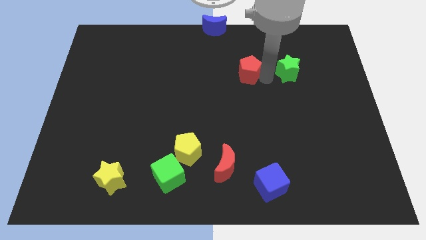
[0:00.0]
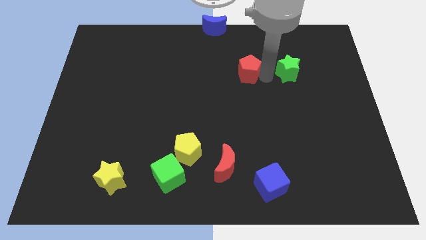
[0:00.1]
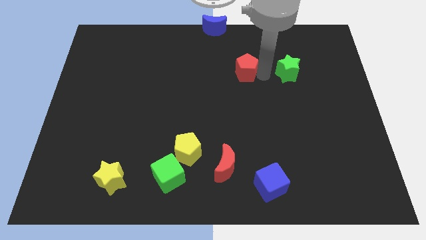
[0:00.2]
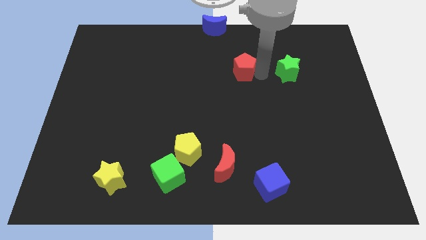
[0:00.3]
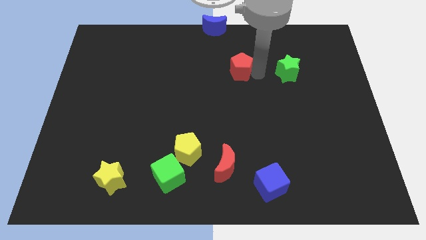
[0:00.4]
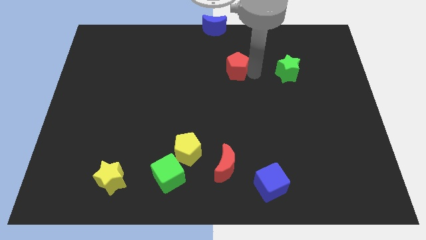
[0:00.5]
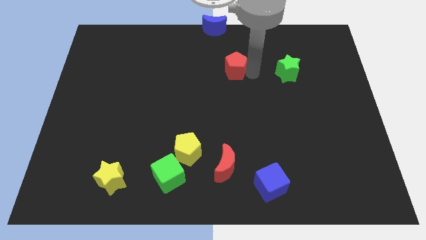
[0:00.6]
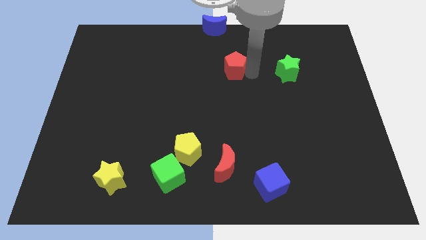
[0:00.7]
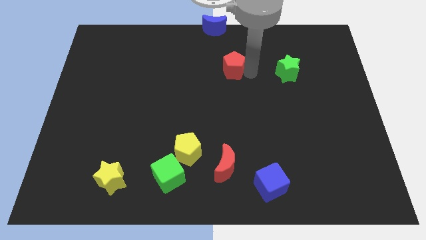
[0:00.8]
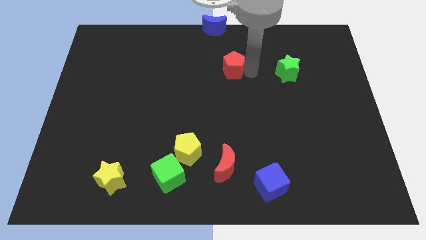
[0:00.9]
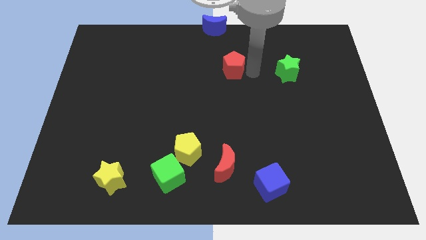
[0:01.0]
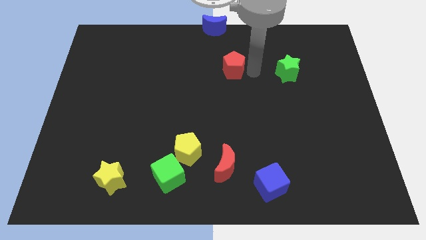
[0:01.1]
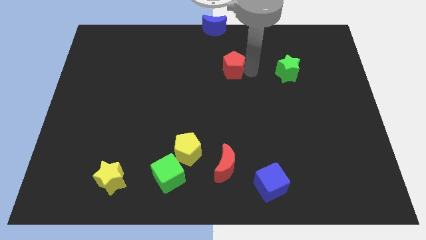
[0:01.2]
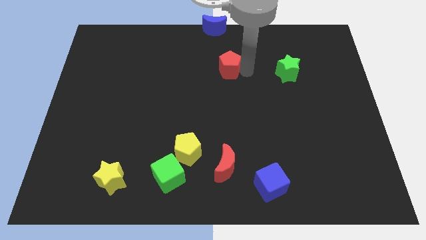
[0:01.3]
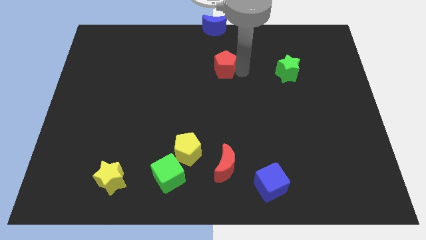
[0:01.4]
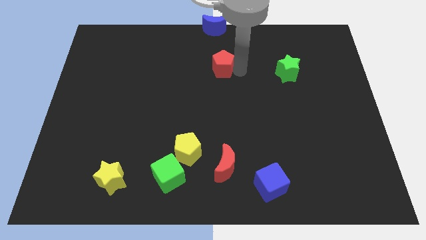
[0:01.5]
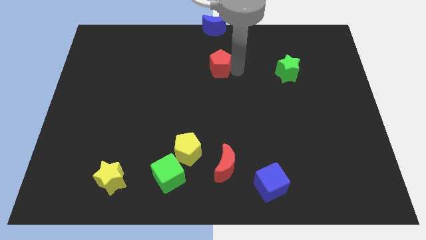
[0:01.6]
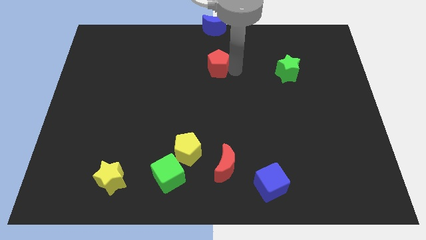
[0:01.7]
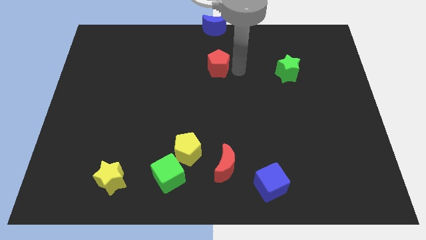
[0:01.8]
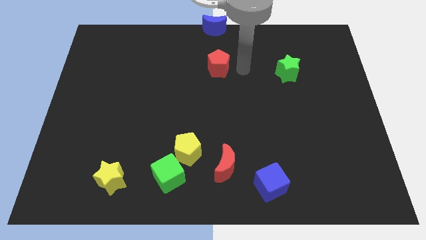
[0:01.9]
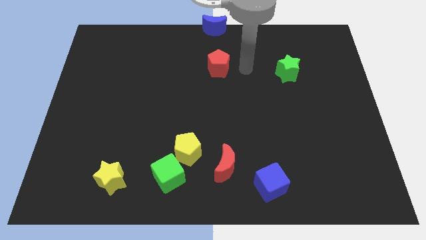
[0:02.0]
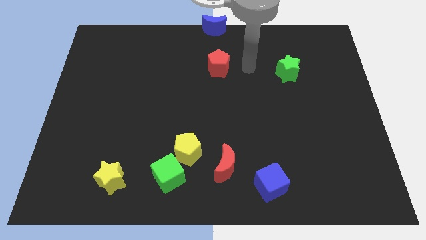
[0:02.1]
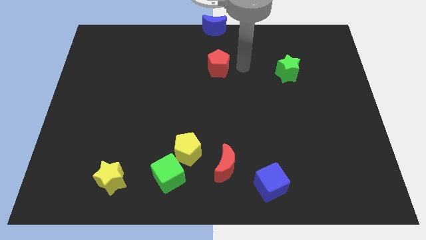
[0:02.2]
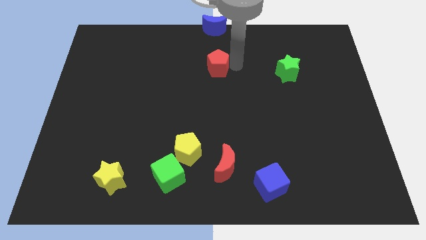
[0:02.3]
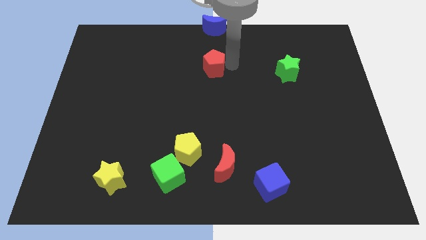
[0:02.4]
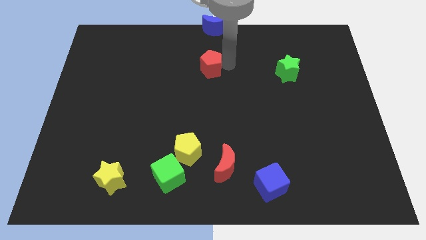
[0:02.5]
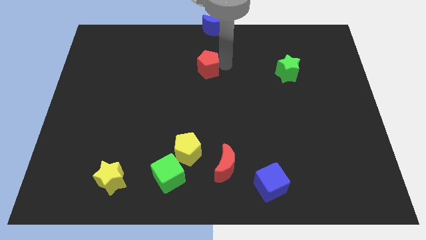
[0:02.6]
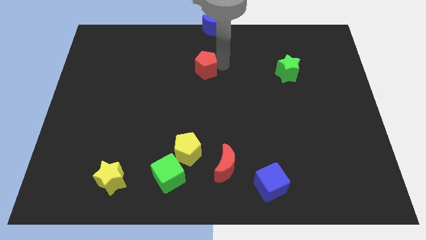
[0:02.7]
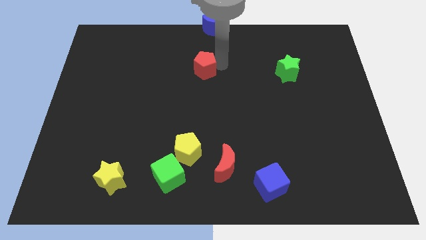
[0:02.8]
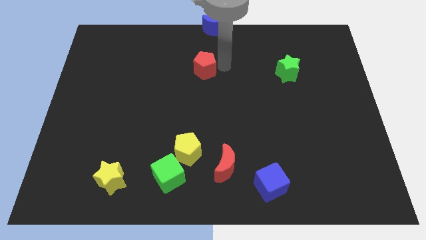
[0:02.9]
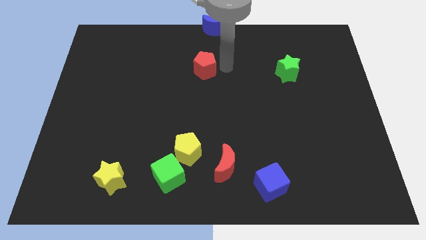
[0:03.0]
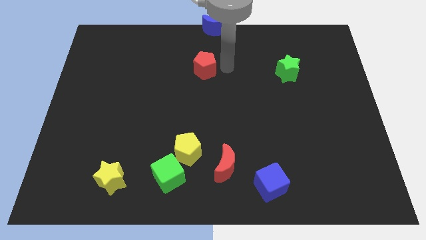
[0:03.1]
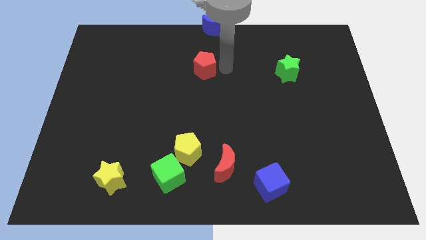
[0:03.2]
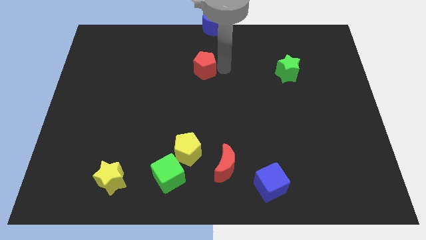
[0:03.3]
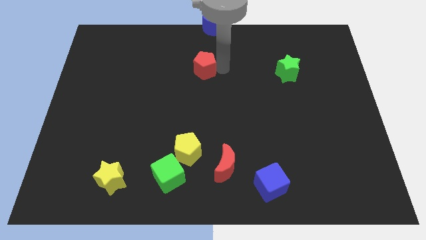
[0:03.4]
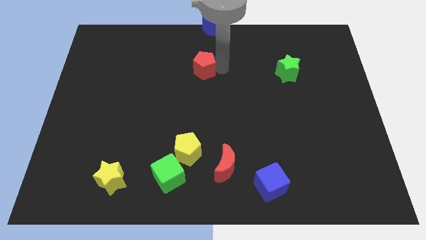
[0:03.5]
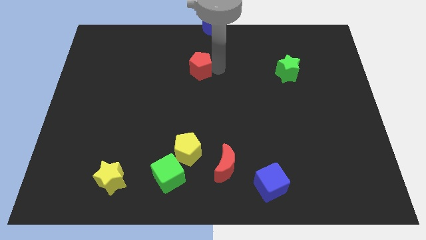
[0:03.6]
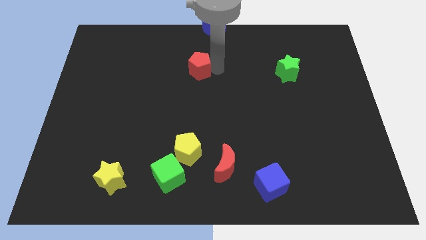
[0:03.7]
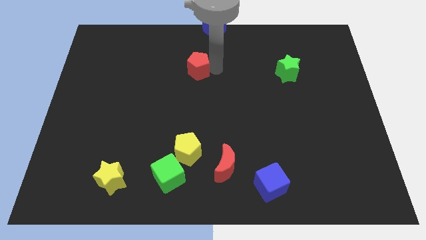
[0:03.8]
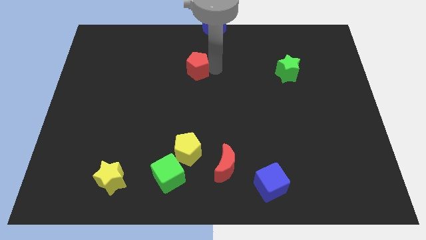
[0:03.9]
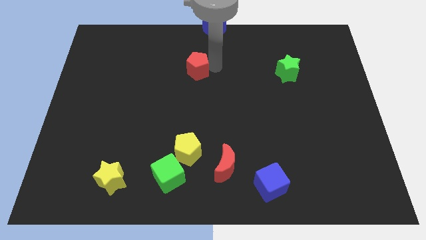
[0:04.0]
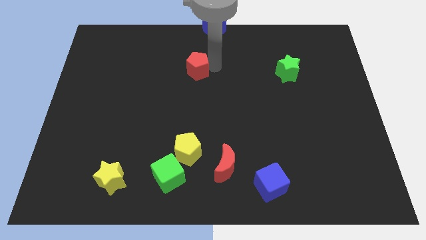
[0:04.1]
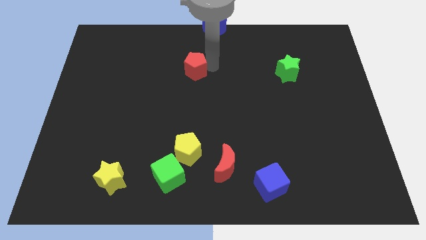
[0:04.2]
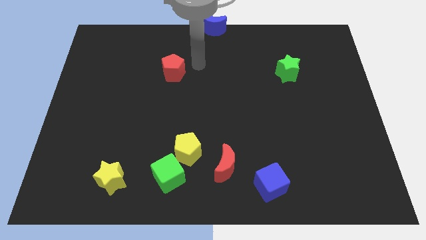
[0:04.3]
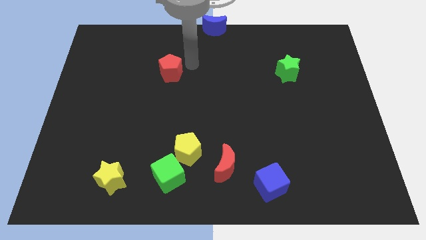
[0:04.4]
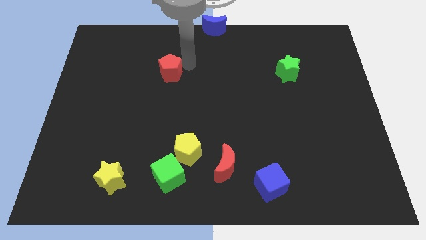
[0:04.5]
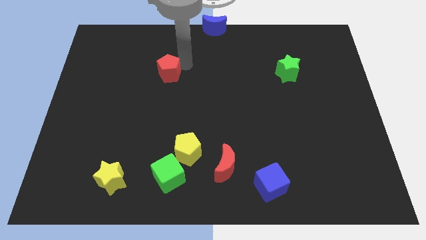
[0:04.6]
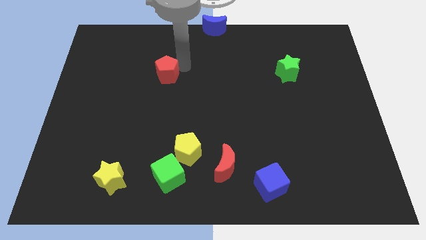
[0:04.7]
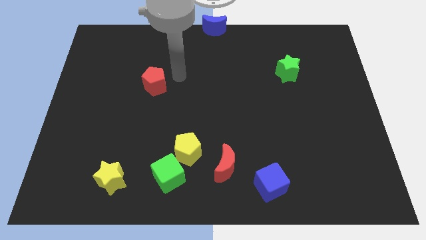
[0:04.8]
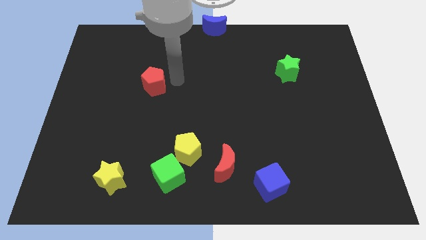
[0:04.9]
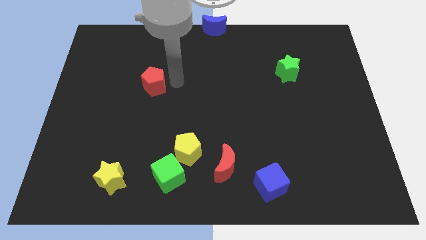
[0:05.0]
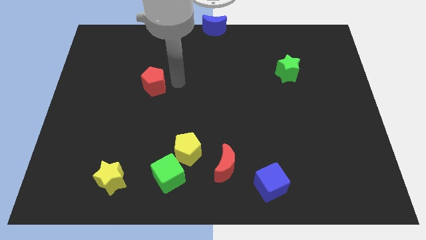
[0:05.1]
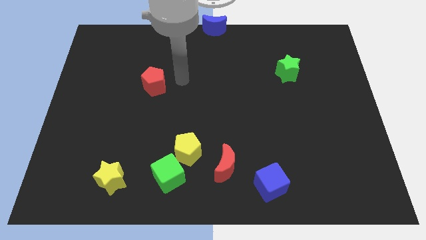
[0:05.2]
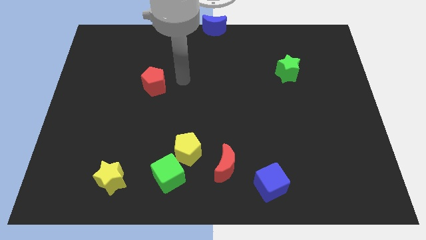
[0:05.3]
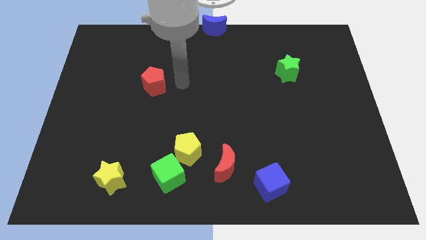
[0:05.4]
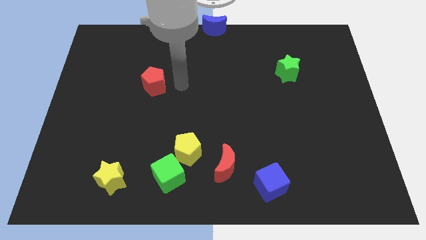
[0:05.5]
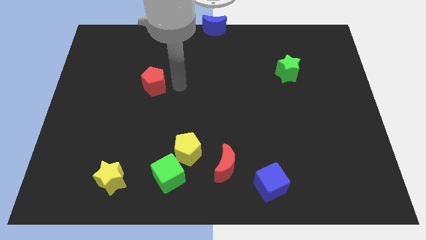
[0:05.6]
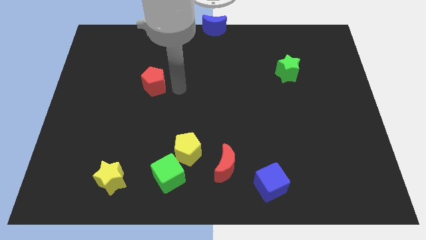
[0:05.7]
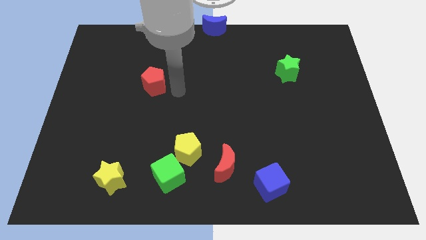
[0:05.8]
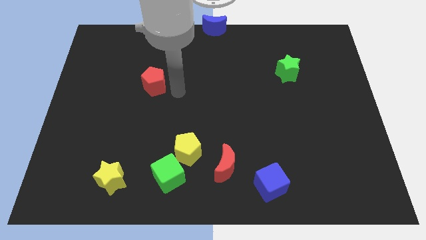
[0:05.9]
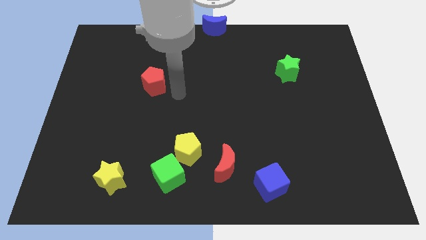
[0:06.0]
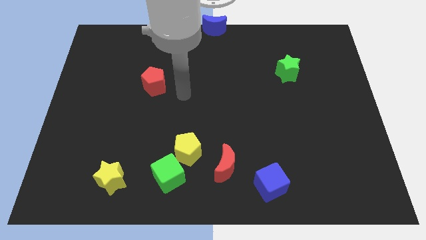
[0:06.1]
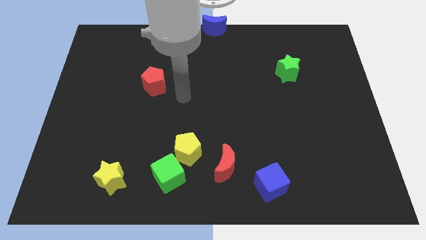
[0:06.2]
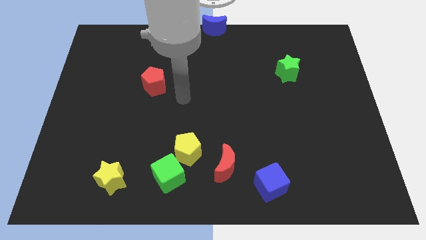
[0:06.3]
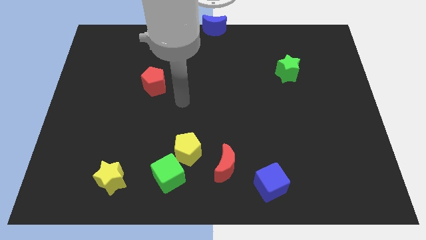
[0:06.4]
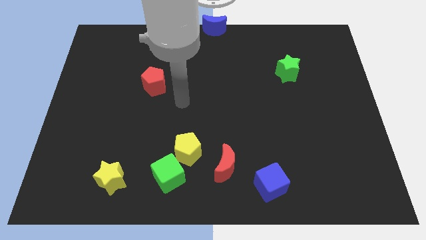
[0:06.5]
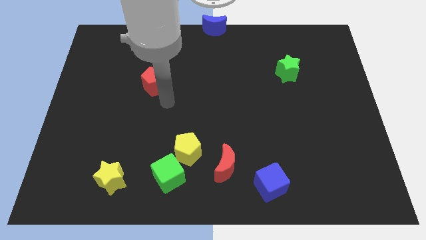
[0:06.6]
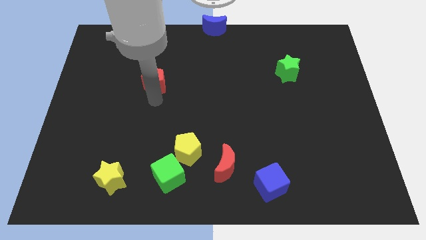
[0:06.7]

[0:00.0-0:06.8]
push the red pentagon to the left side of the board

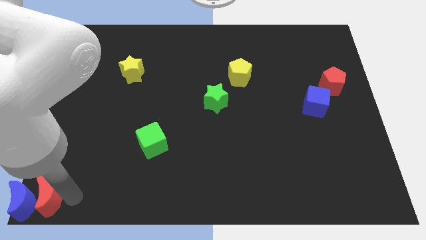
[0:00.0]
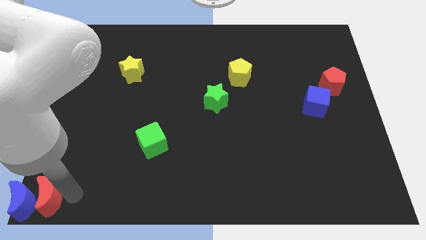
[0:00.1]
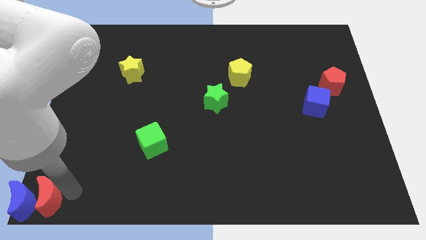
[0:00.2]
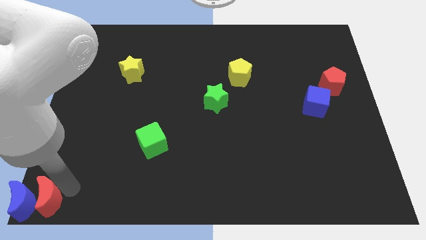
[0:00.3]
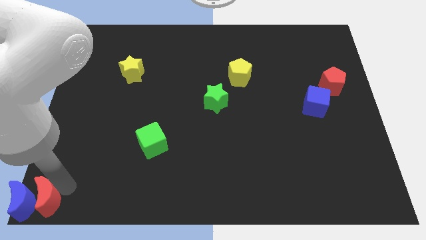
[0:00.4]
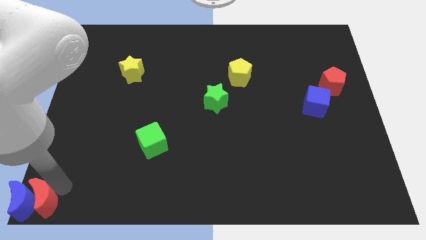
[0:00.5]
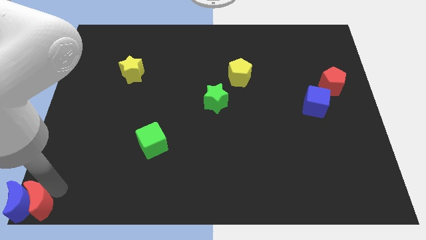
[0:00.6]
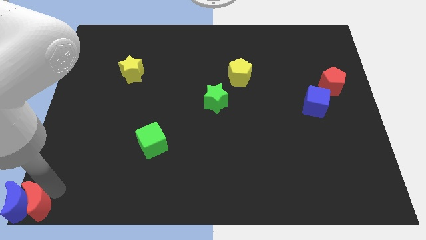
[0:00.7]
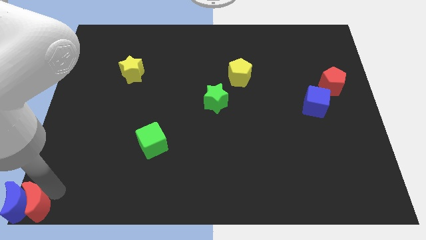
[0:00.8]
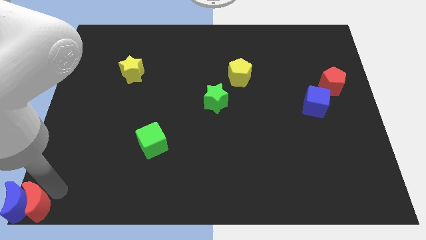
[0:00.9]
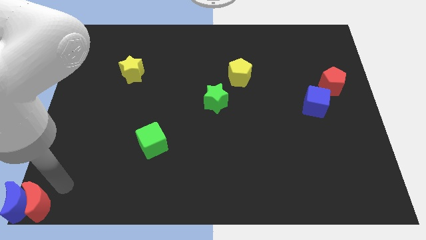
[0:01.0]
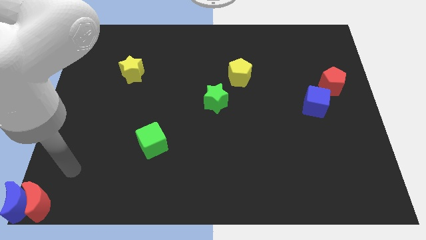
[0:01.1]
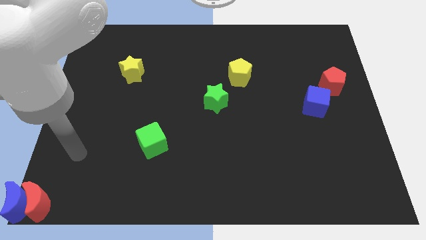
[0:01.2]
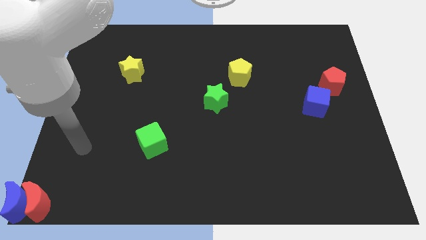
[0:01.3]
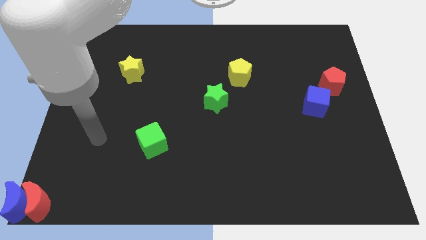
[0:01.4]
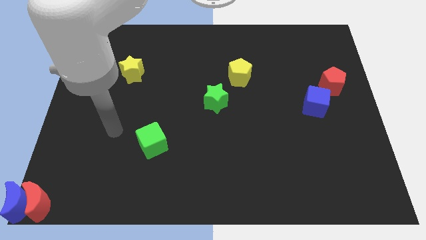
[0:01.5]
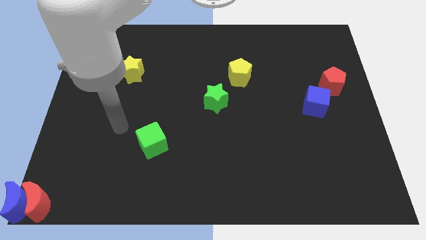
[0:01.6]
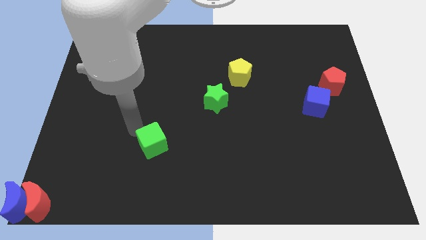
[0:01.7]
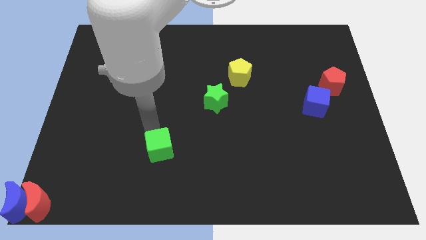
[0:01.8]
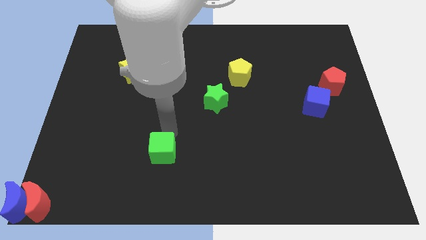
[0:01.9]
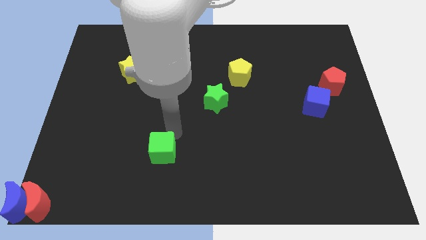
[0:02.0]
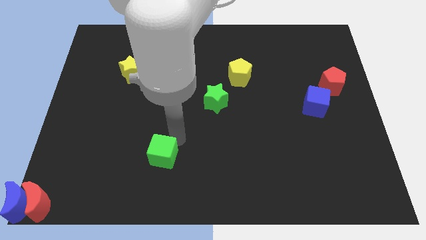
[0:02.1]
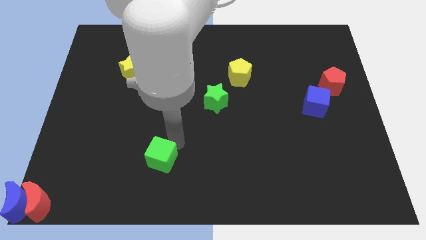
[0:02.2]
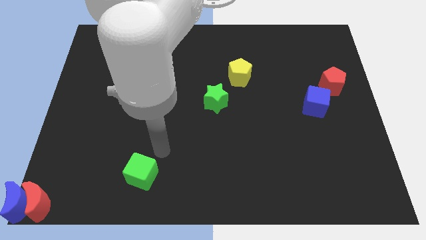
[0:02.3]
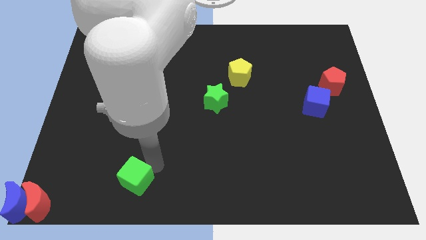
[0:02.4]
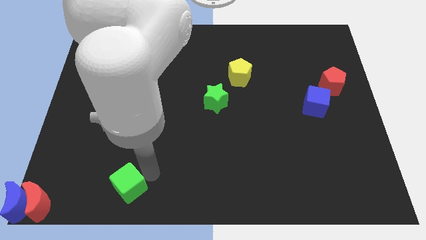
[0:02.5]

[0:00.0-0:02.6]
place the green cube vertically above the yellow star
